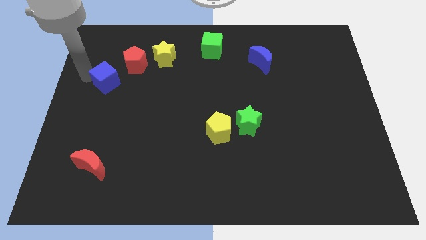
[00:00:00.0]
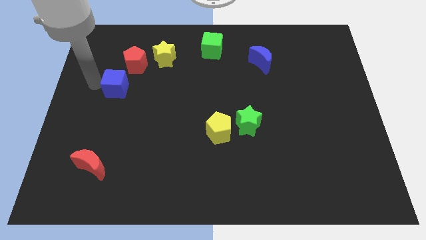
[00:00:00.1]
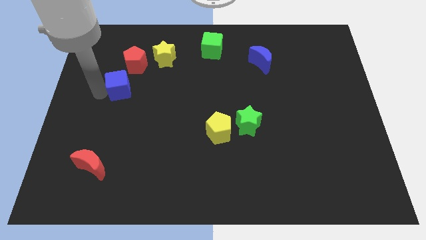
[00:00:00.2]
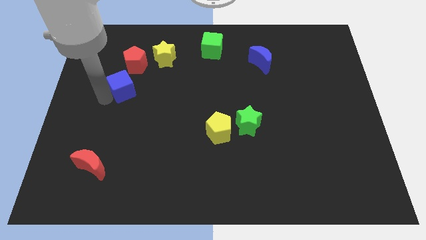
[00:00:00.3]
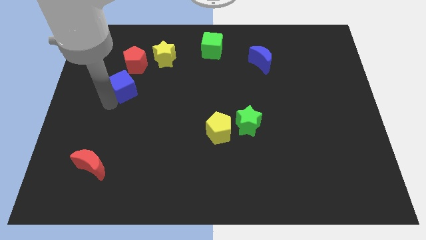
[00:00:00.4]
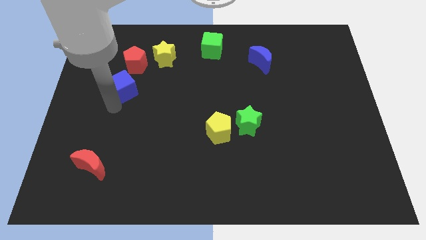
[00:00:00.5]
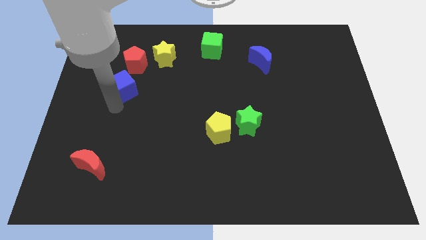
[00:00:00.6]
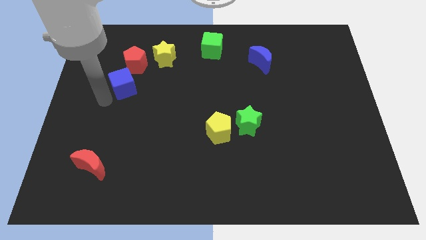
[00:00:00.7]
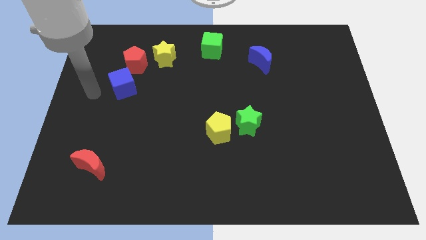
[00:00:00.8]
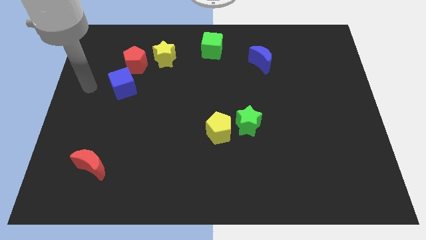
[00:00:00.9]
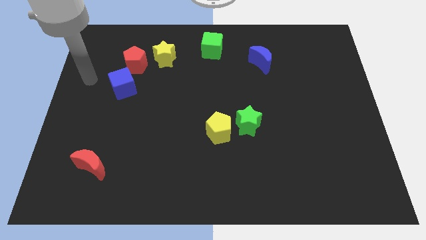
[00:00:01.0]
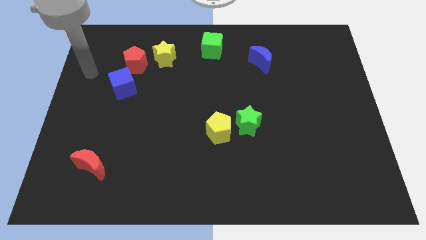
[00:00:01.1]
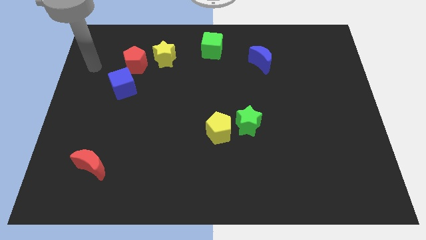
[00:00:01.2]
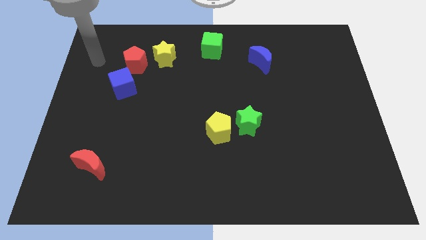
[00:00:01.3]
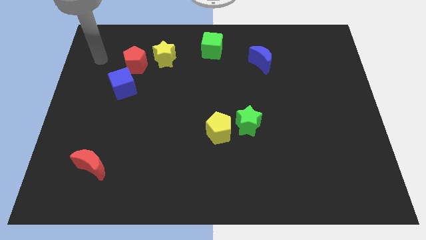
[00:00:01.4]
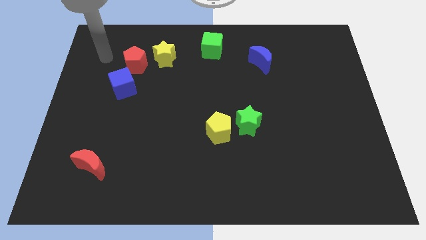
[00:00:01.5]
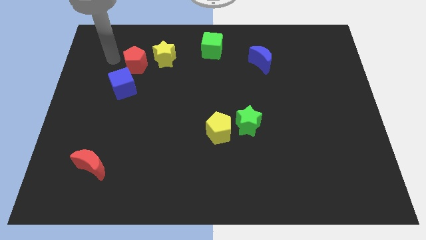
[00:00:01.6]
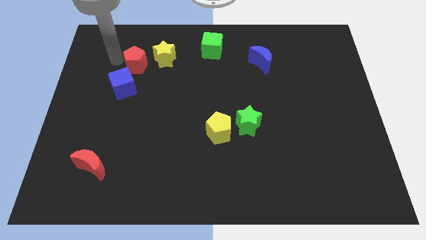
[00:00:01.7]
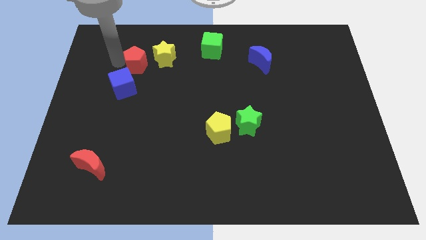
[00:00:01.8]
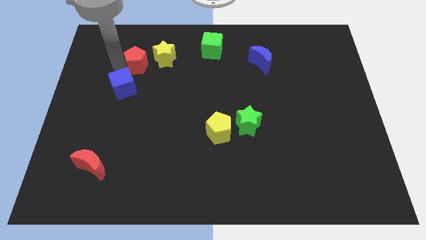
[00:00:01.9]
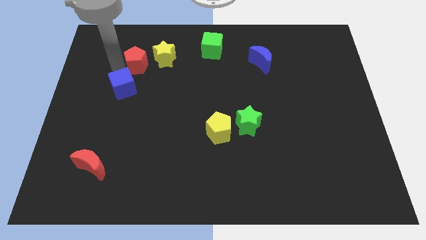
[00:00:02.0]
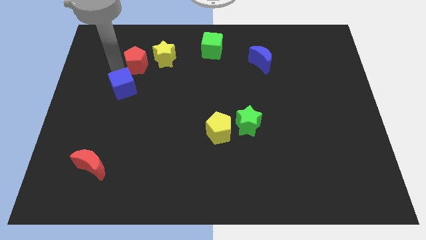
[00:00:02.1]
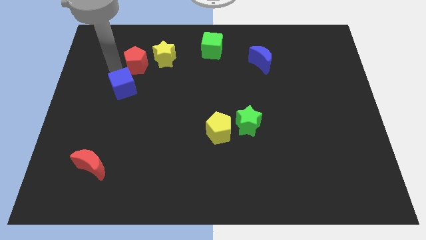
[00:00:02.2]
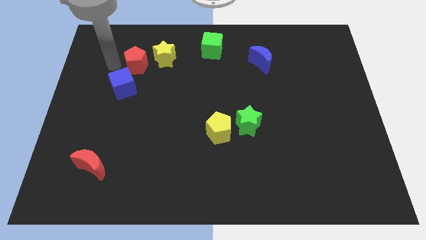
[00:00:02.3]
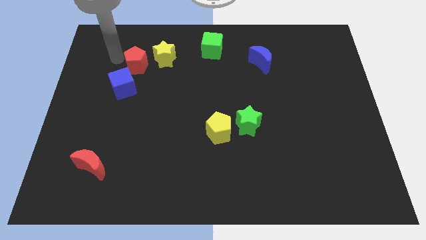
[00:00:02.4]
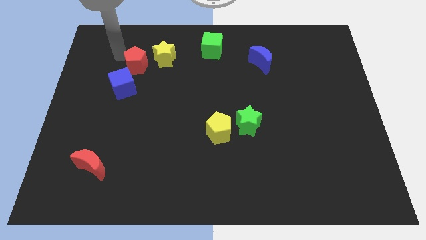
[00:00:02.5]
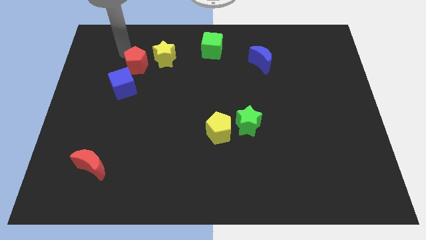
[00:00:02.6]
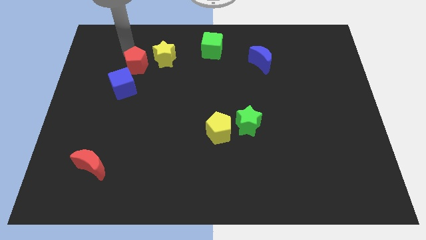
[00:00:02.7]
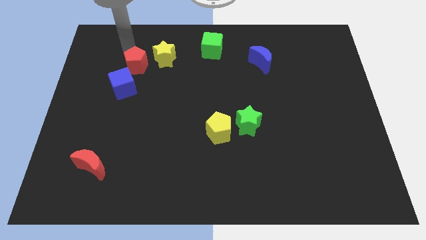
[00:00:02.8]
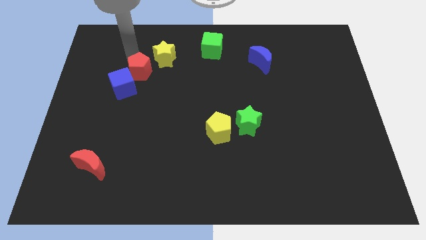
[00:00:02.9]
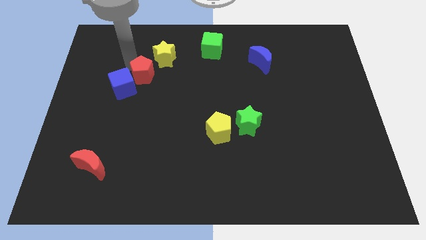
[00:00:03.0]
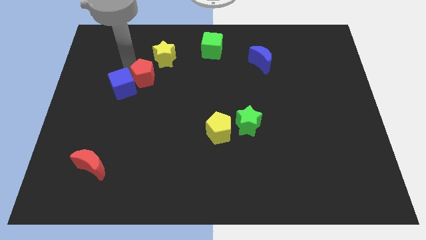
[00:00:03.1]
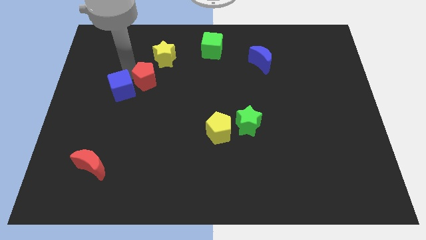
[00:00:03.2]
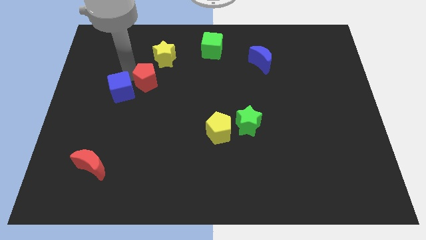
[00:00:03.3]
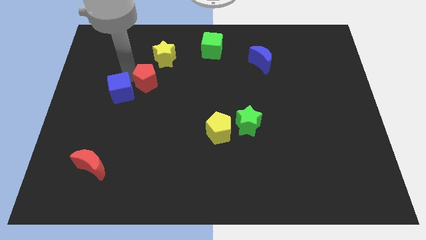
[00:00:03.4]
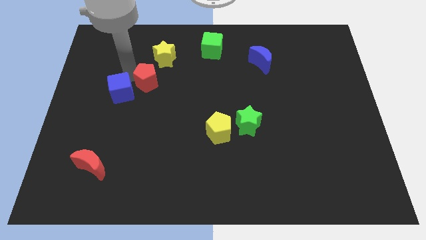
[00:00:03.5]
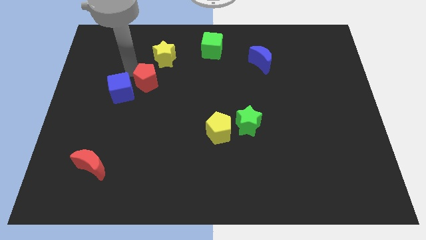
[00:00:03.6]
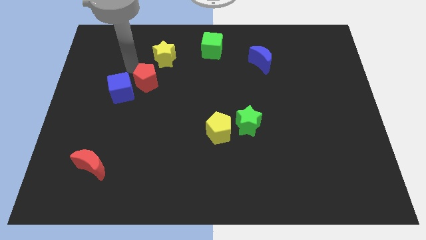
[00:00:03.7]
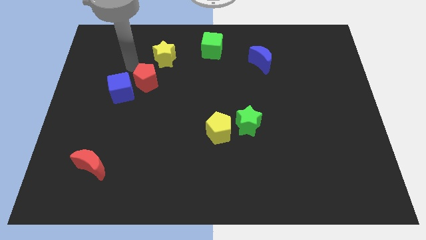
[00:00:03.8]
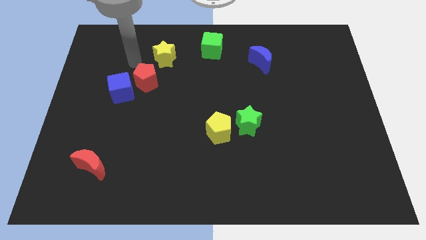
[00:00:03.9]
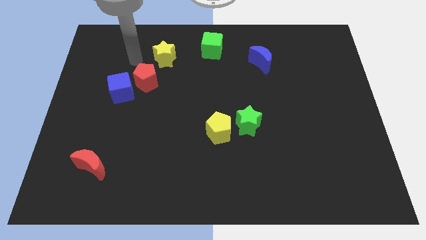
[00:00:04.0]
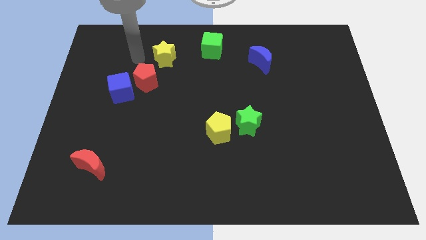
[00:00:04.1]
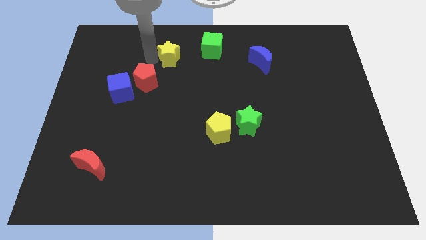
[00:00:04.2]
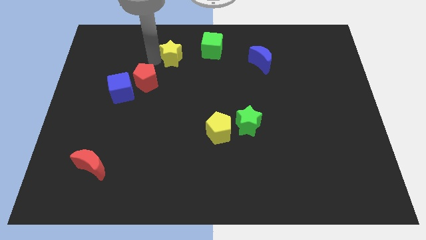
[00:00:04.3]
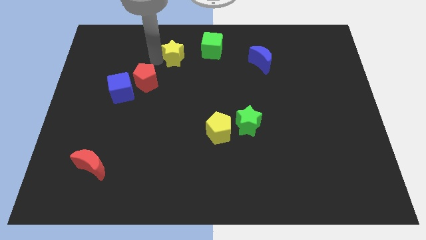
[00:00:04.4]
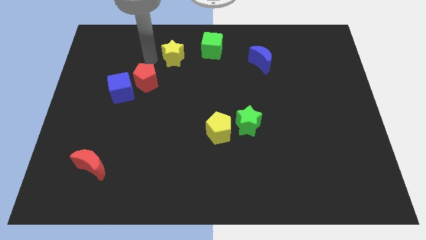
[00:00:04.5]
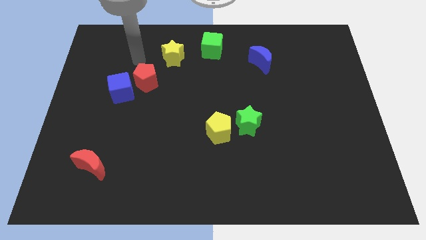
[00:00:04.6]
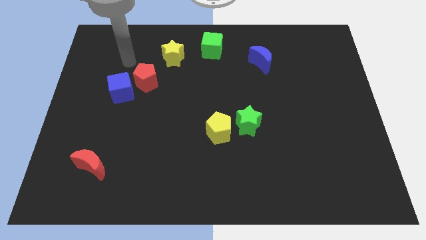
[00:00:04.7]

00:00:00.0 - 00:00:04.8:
move the blue cube towards the downside

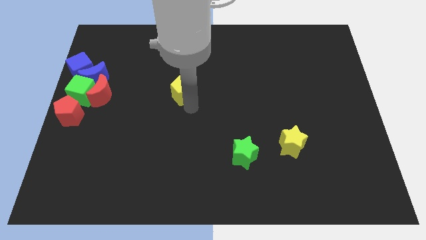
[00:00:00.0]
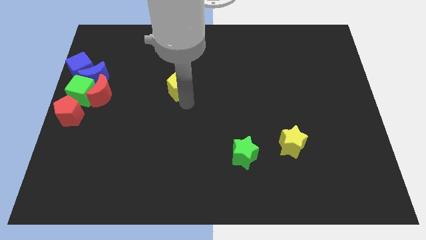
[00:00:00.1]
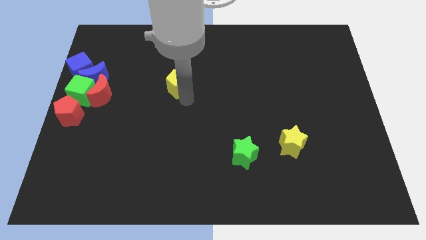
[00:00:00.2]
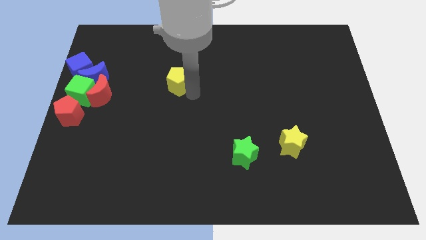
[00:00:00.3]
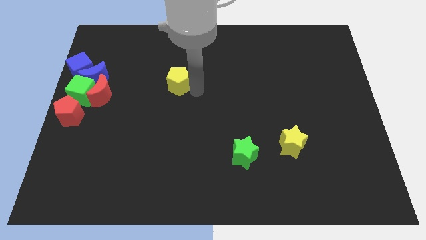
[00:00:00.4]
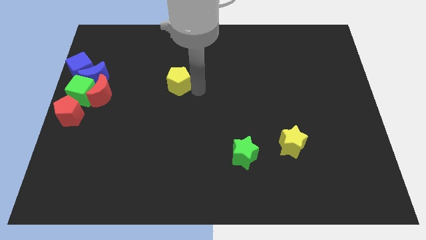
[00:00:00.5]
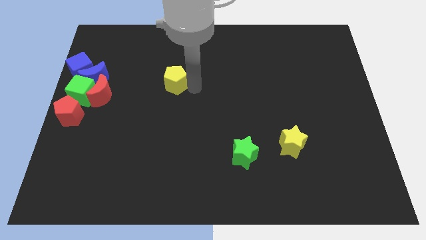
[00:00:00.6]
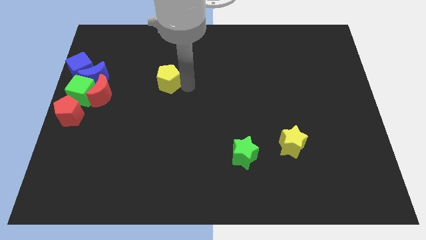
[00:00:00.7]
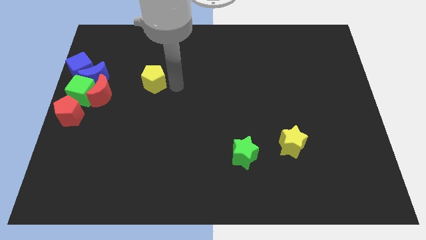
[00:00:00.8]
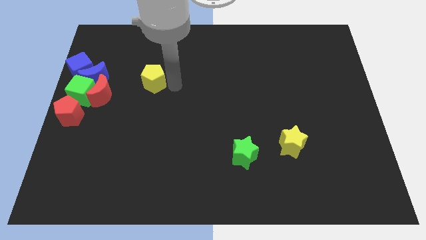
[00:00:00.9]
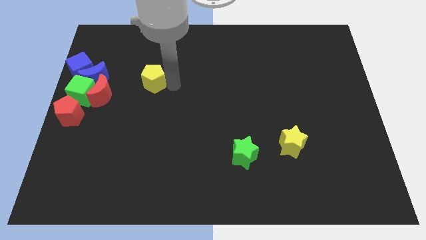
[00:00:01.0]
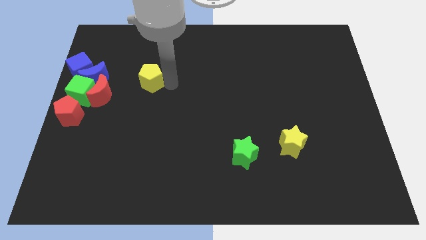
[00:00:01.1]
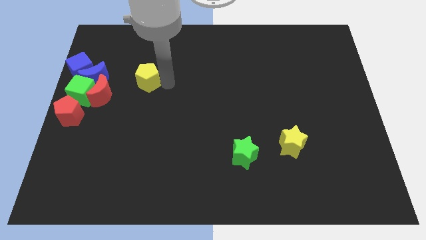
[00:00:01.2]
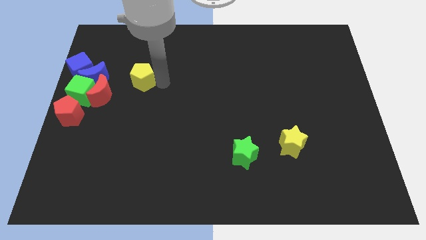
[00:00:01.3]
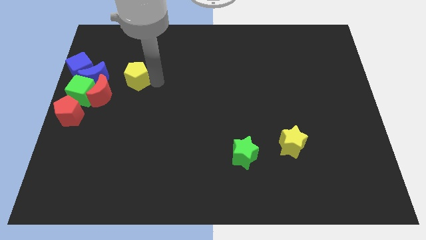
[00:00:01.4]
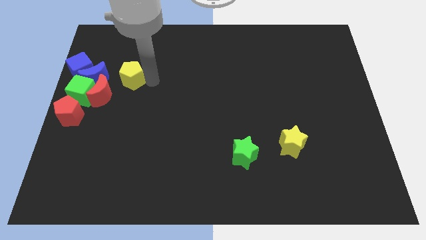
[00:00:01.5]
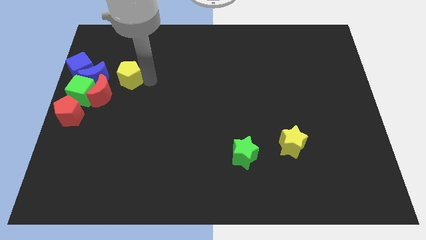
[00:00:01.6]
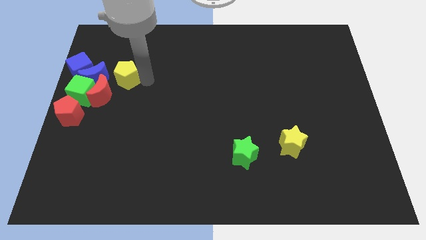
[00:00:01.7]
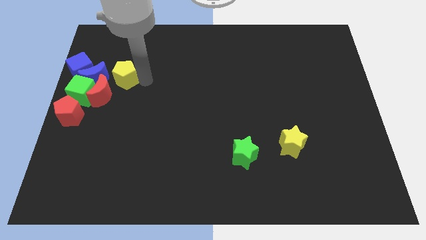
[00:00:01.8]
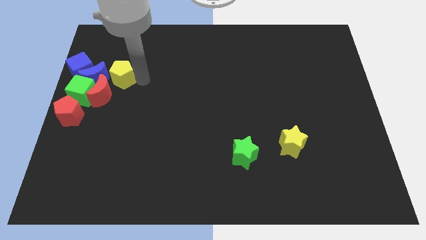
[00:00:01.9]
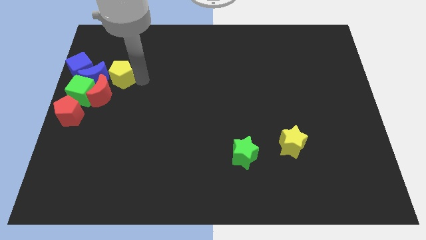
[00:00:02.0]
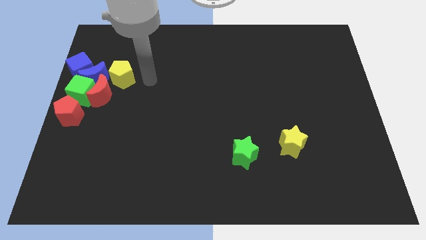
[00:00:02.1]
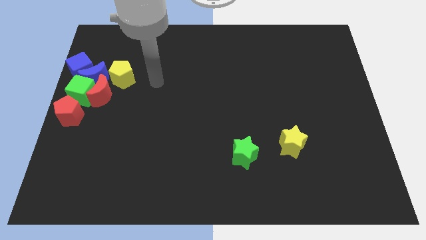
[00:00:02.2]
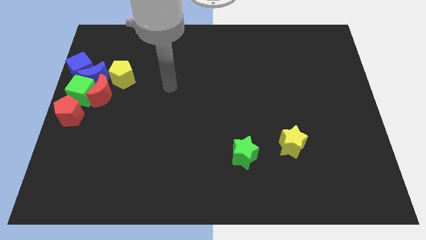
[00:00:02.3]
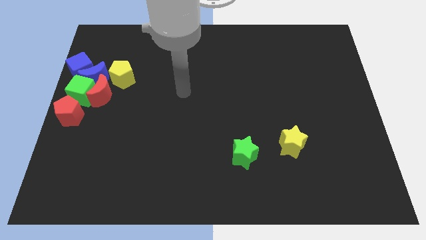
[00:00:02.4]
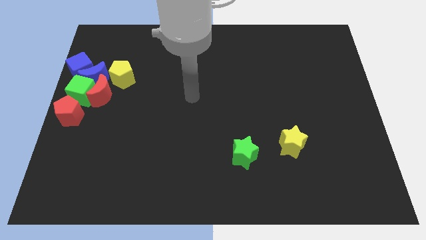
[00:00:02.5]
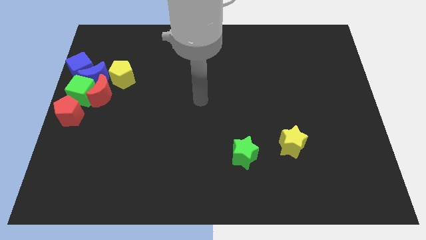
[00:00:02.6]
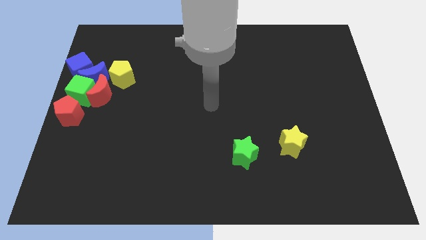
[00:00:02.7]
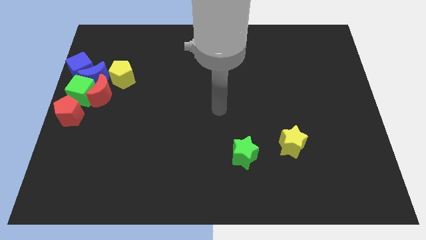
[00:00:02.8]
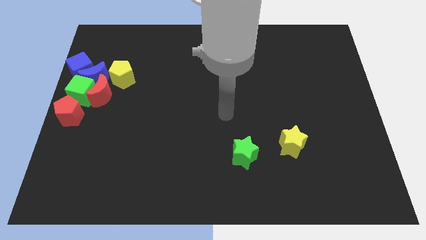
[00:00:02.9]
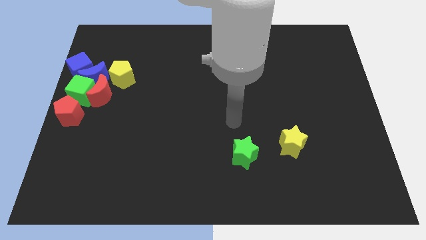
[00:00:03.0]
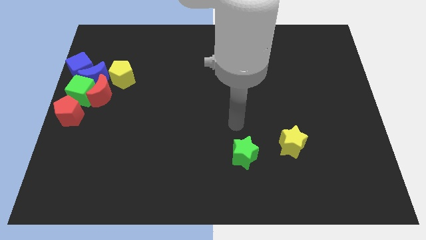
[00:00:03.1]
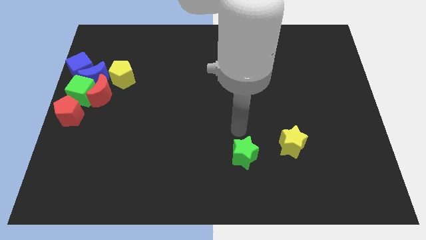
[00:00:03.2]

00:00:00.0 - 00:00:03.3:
slide the yellow pentagon to the right side of the blue crescent

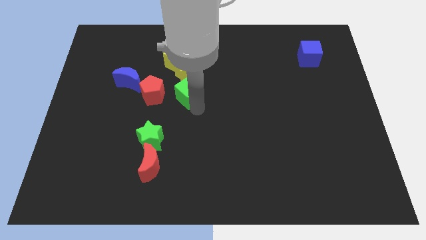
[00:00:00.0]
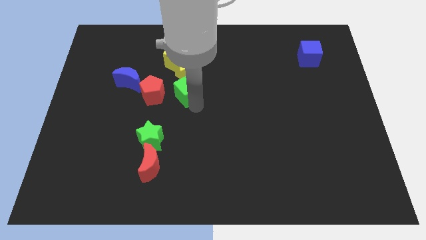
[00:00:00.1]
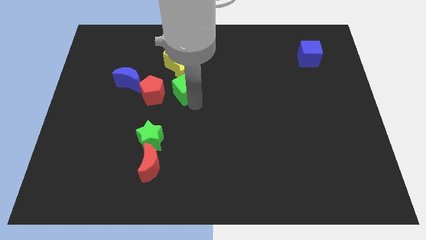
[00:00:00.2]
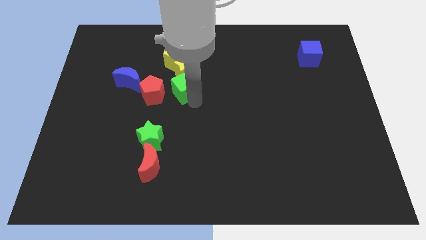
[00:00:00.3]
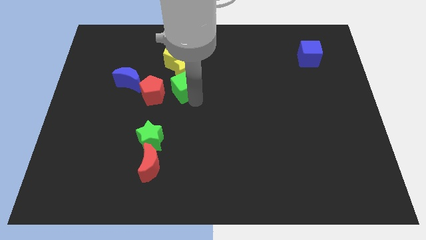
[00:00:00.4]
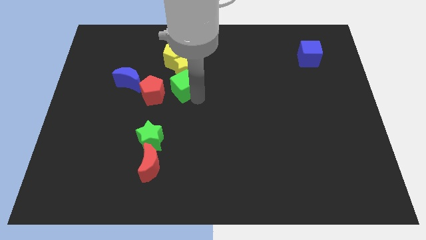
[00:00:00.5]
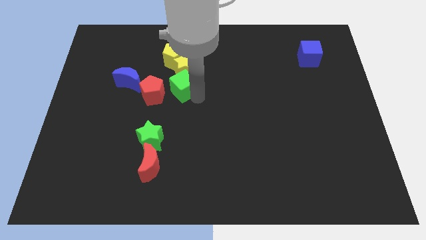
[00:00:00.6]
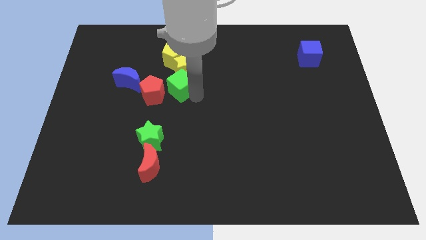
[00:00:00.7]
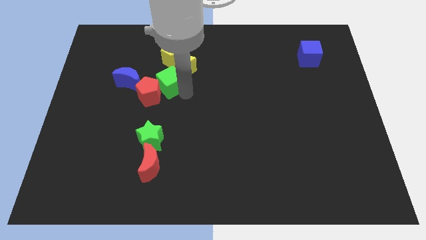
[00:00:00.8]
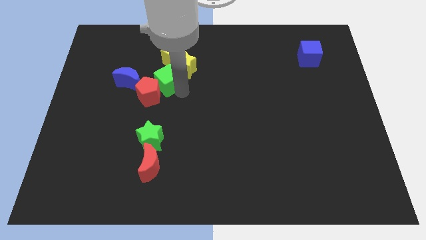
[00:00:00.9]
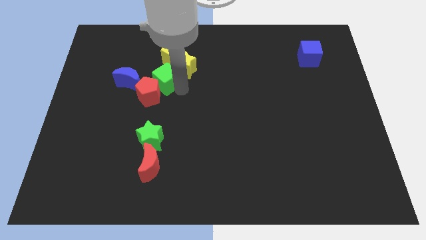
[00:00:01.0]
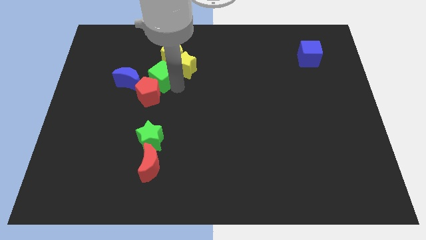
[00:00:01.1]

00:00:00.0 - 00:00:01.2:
place the green cube in between the red pentagon and yellow star
